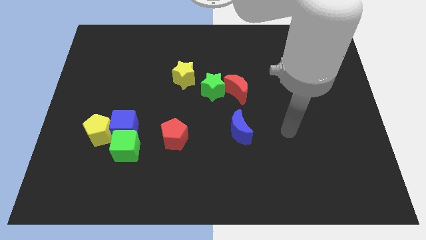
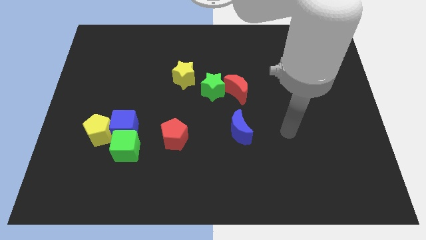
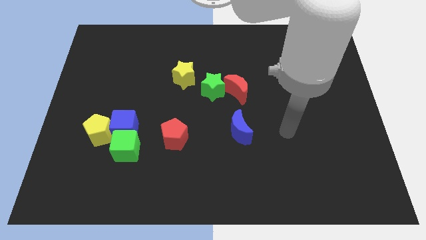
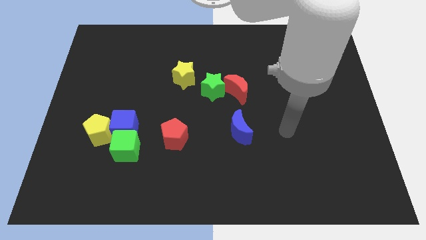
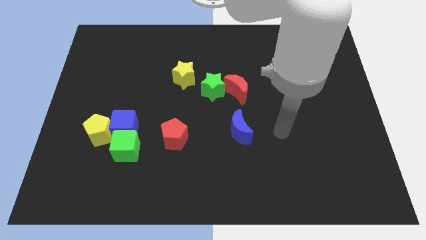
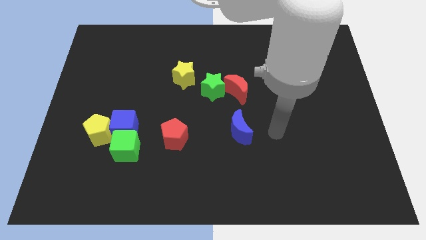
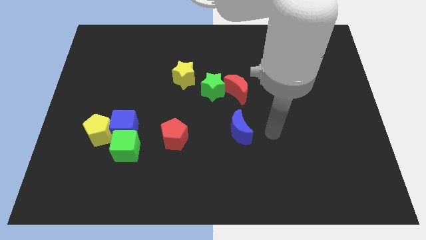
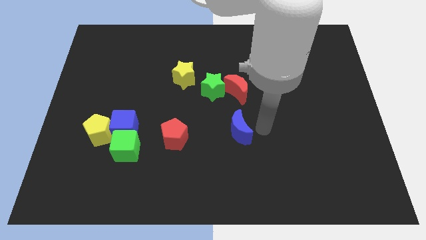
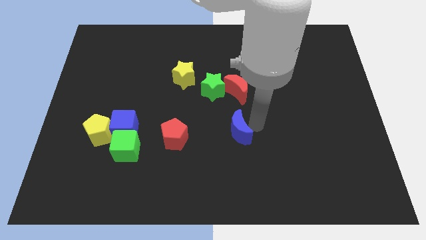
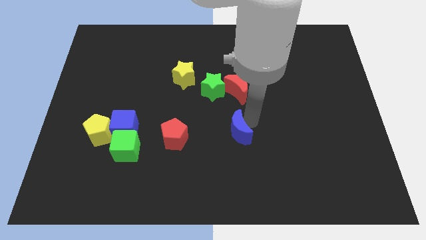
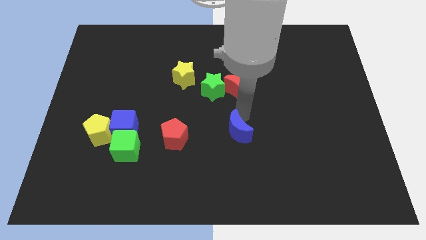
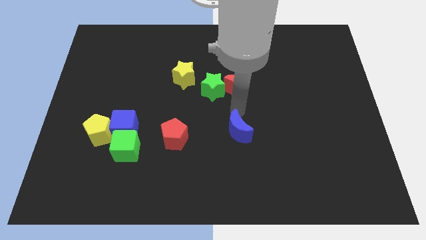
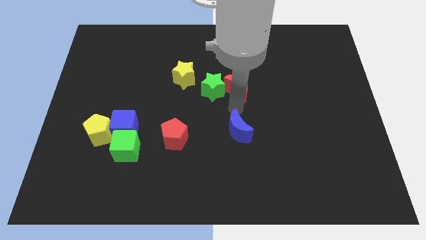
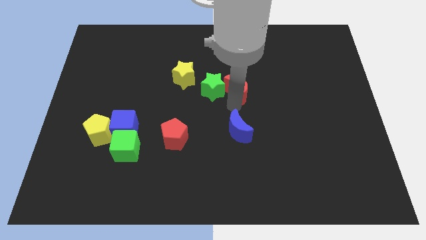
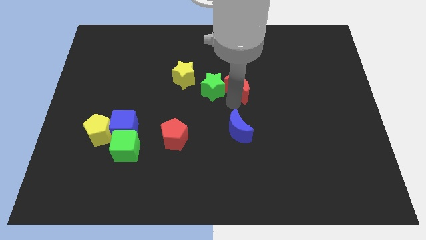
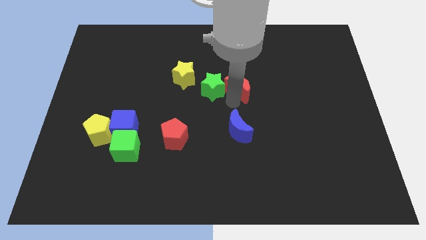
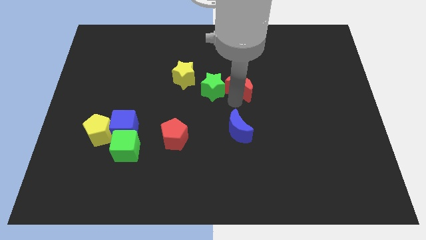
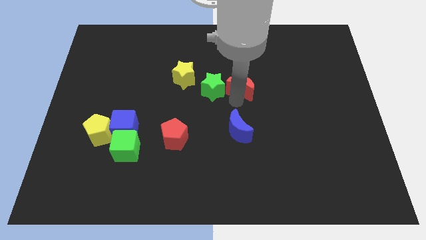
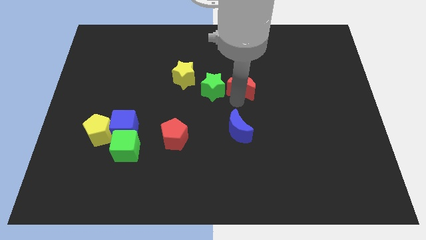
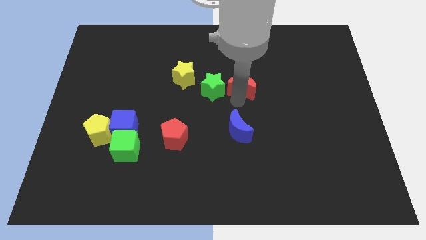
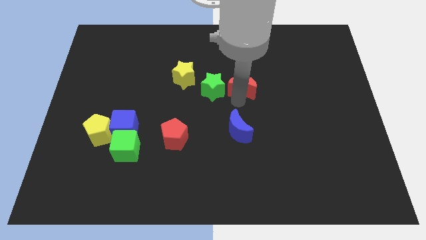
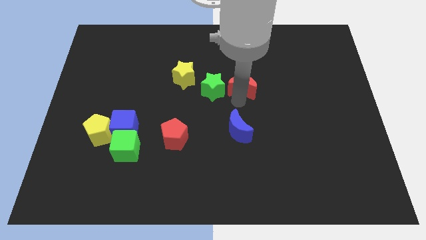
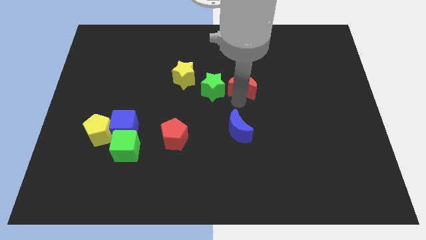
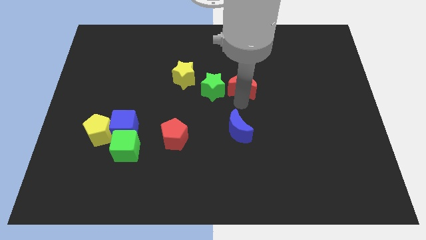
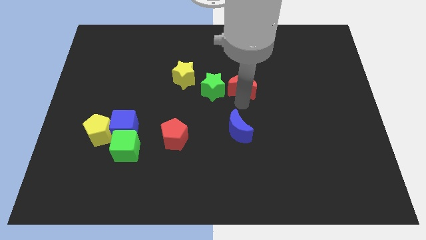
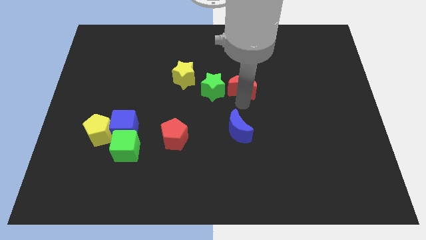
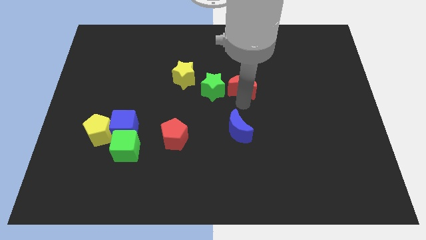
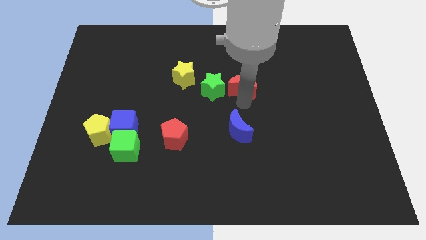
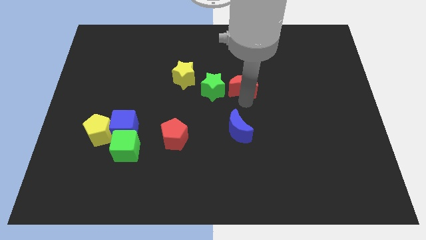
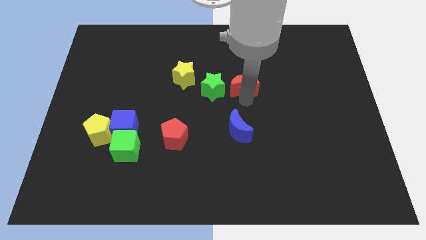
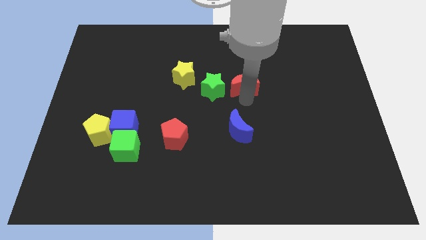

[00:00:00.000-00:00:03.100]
move the red moon slightly to the middle of the board

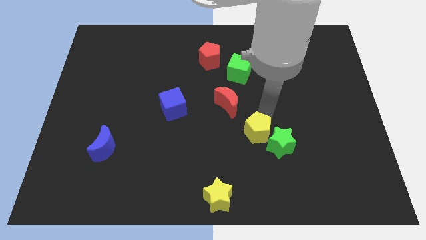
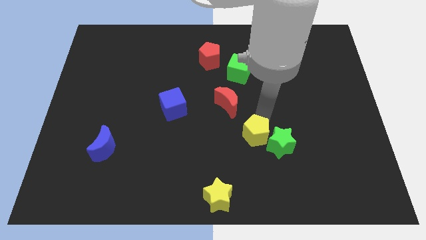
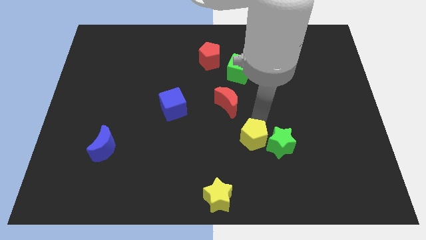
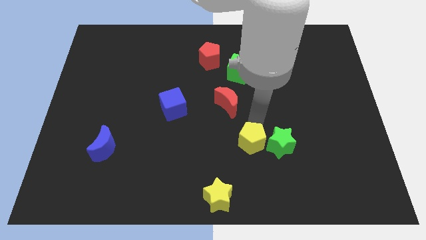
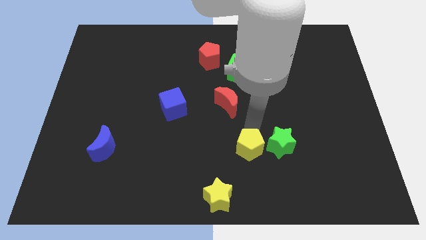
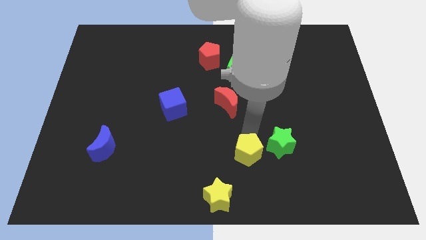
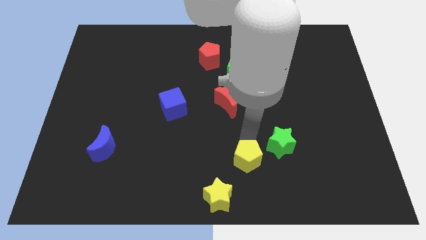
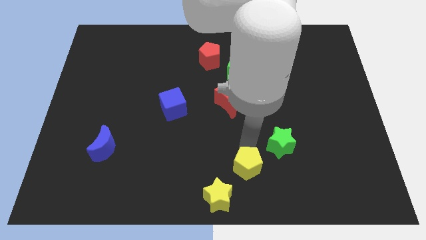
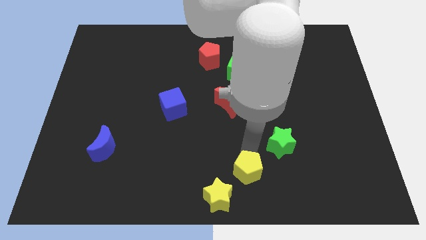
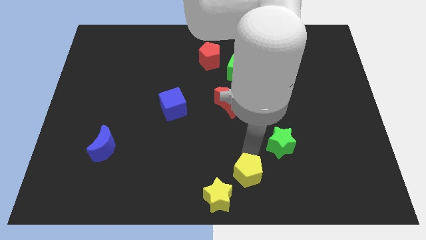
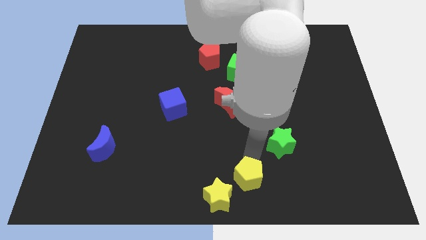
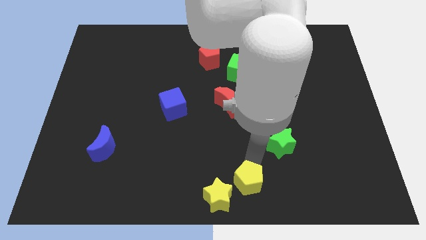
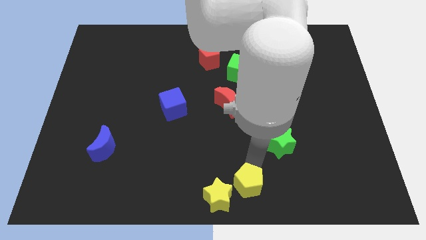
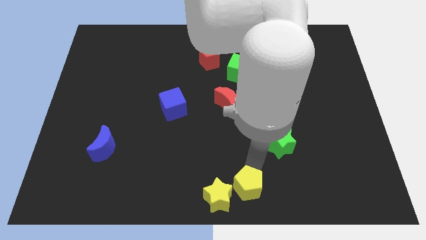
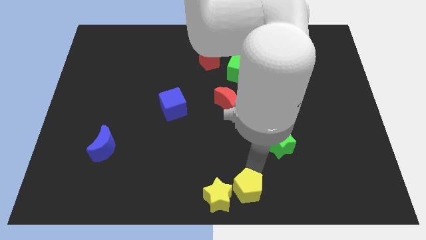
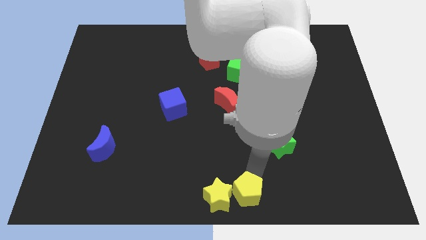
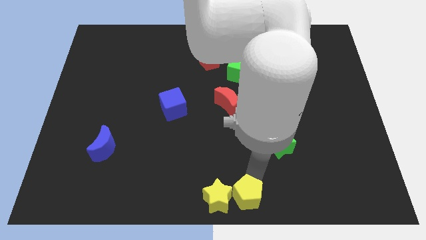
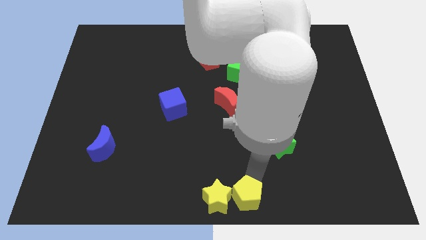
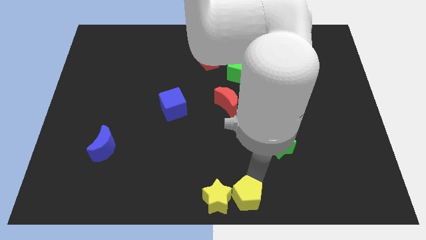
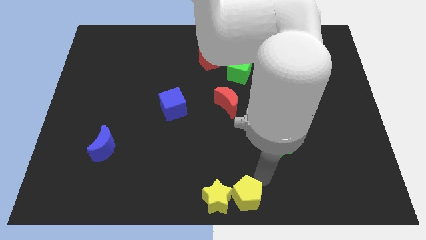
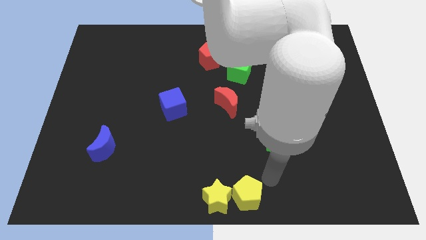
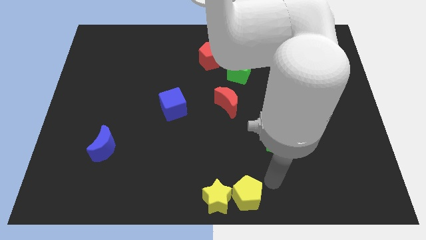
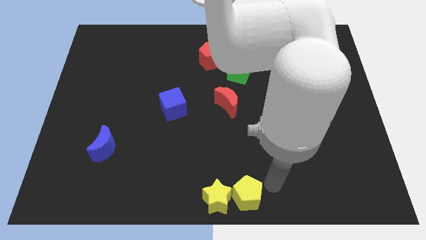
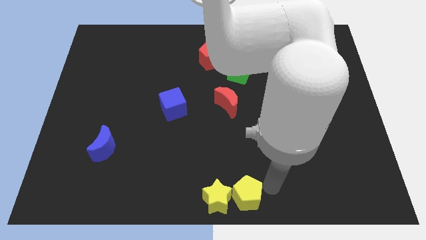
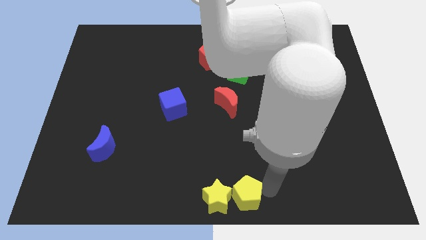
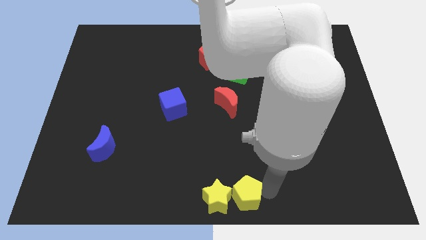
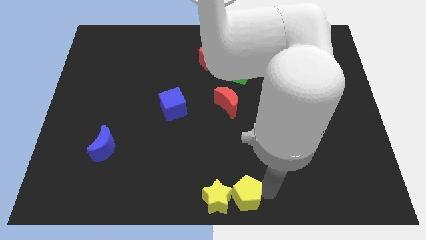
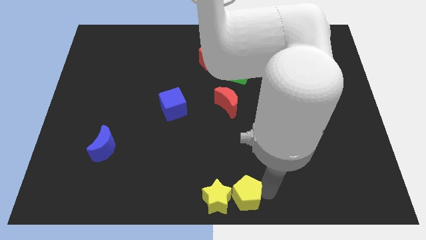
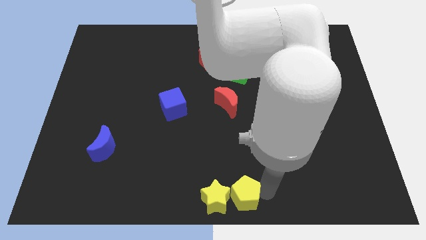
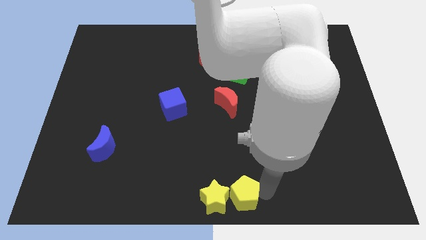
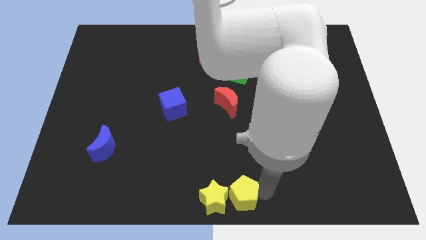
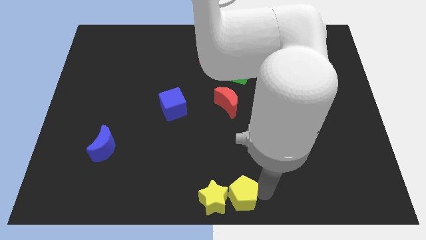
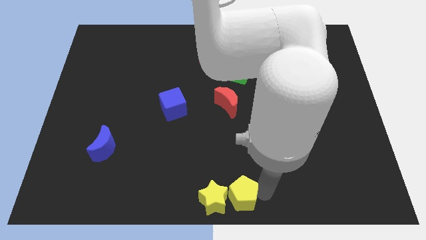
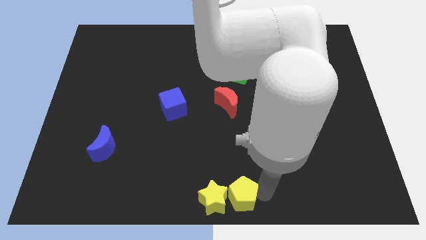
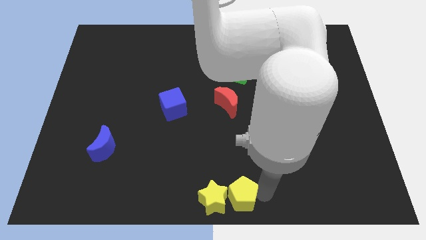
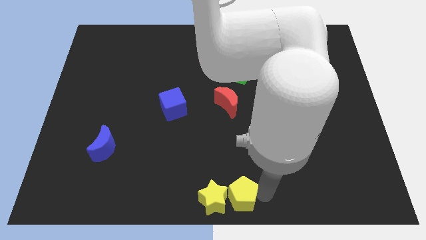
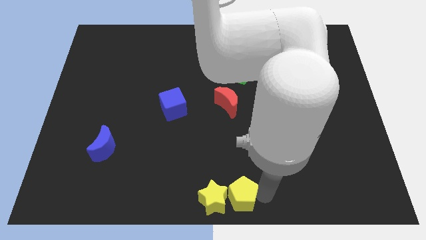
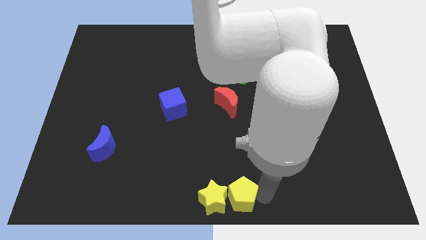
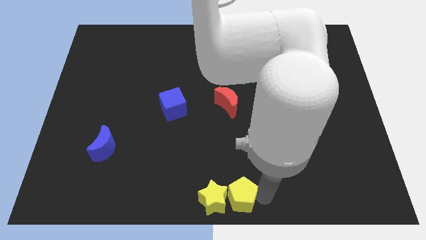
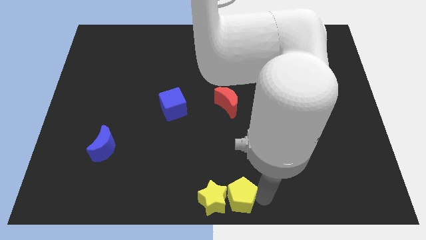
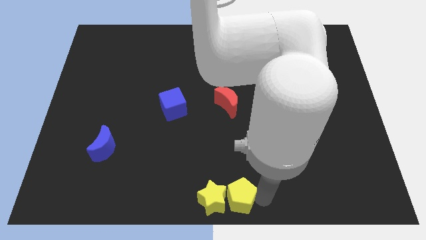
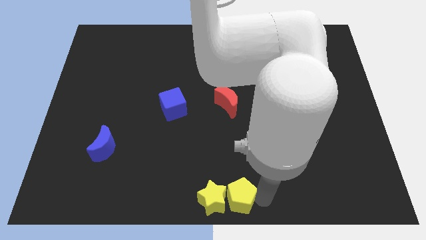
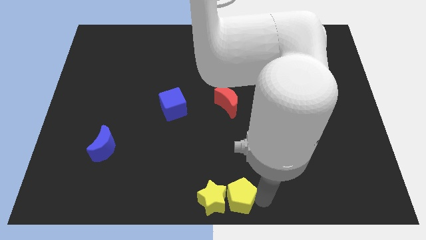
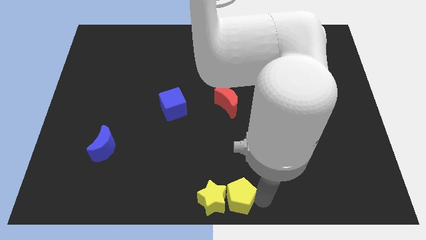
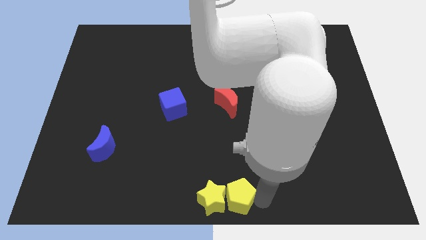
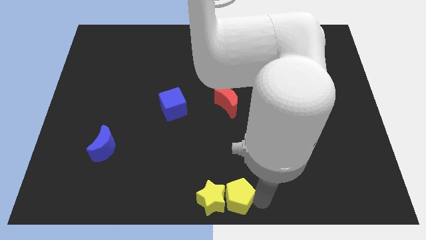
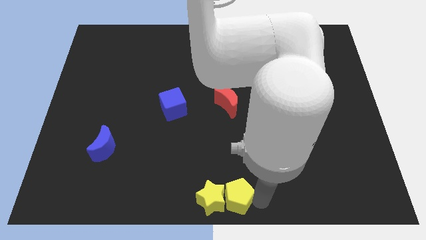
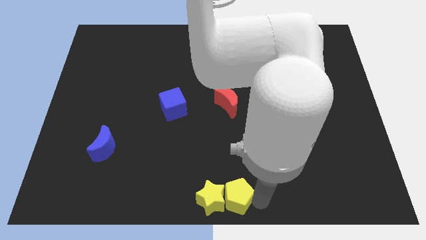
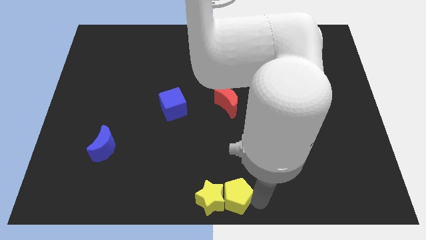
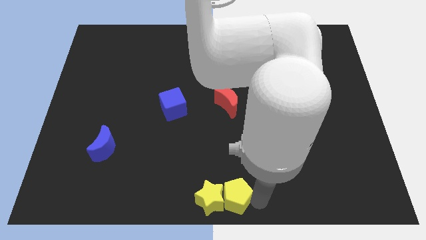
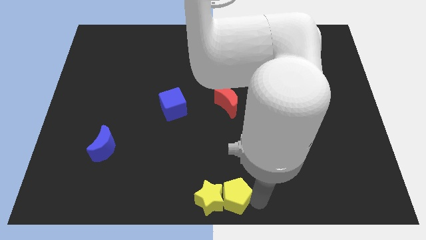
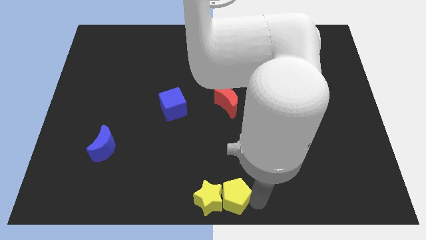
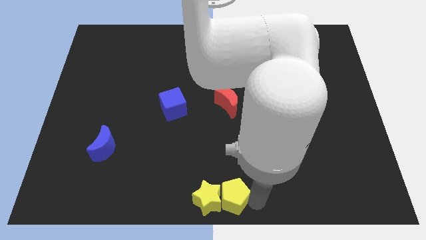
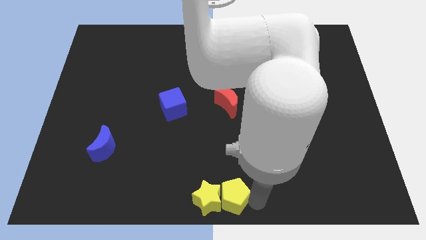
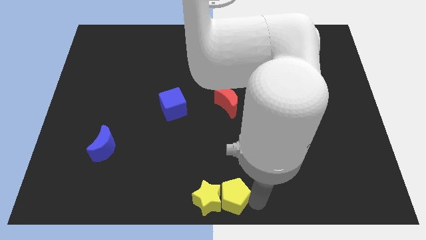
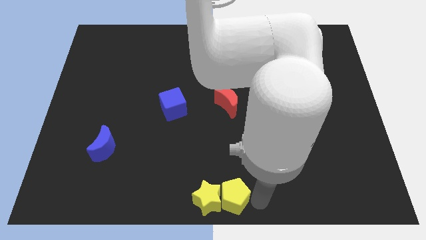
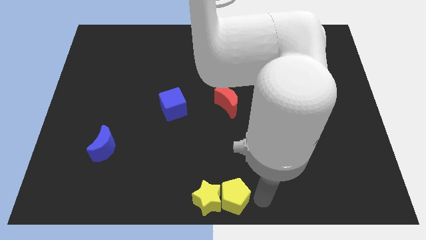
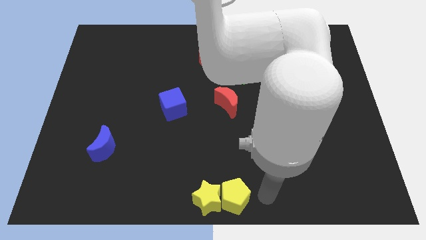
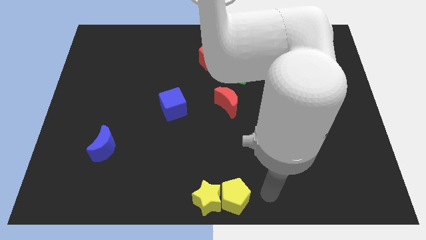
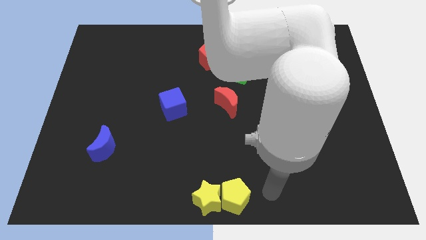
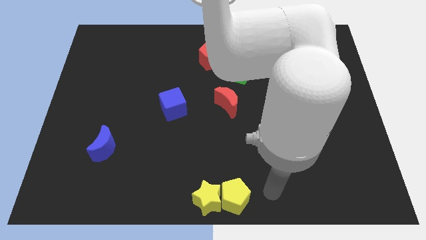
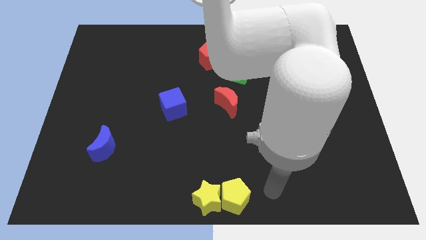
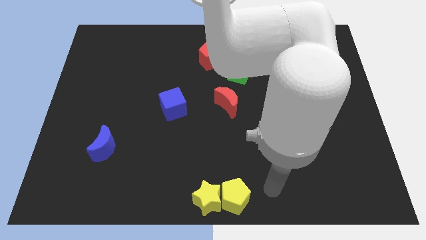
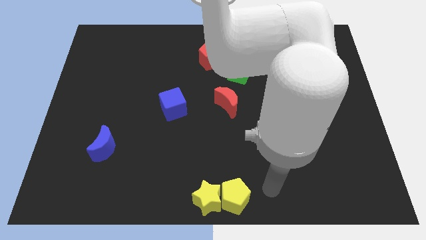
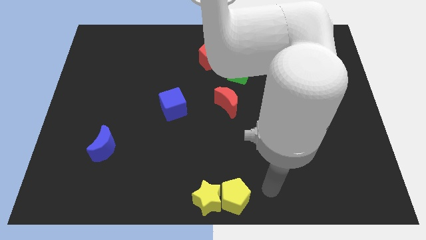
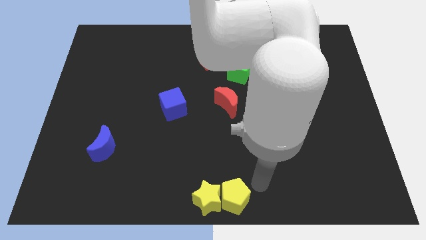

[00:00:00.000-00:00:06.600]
put the yellow pentagon to the right side of the yellow star
